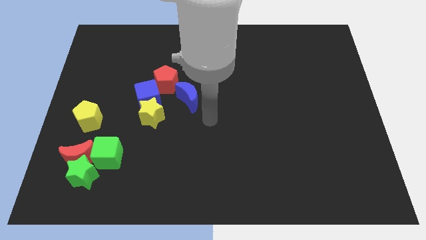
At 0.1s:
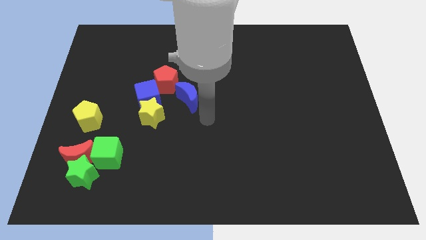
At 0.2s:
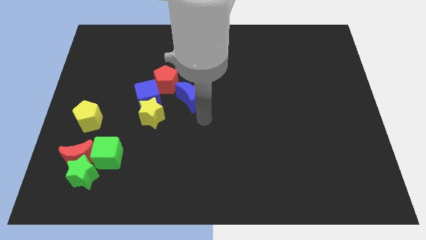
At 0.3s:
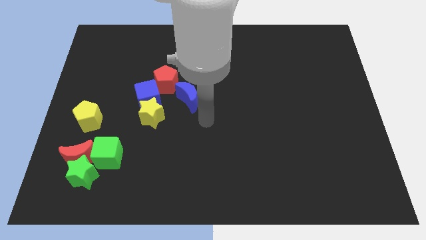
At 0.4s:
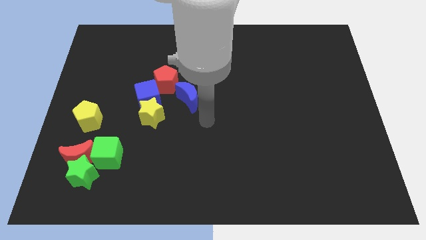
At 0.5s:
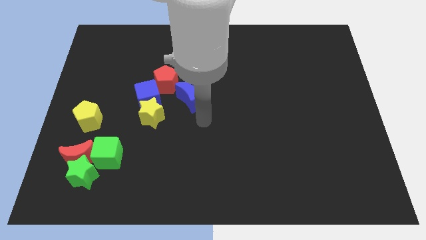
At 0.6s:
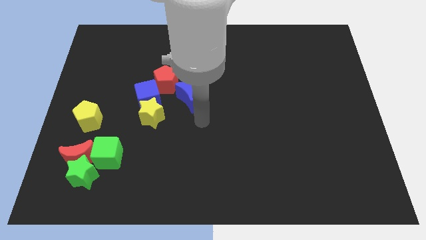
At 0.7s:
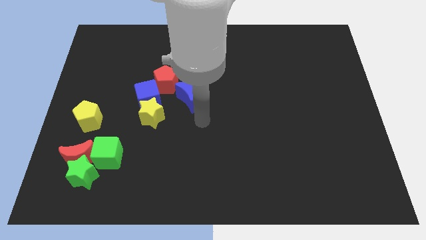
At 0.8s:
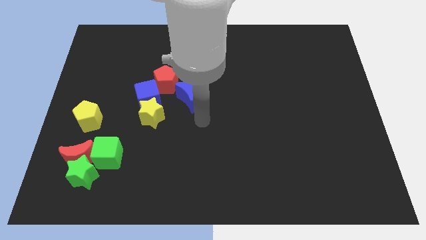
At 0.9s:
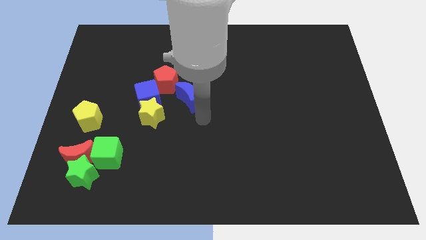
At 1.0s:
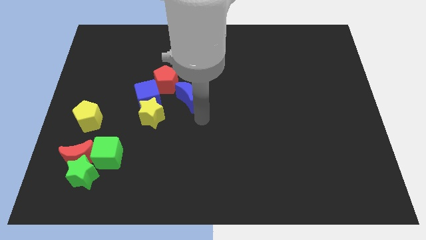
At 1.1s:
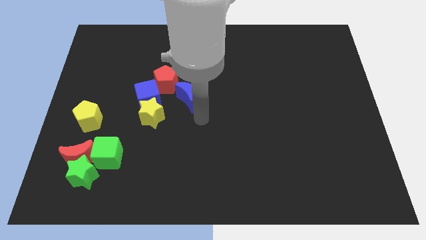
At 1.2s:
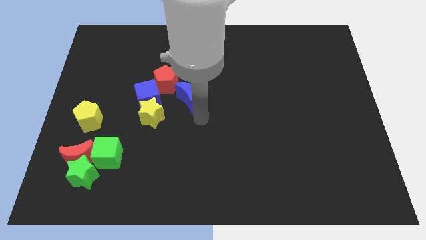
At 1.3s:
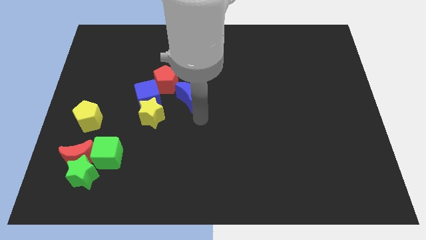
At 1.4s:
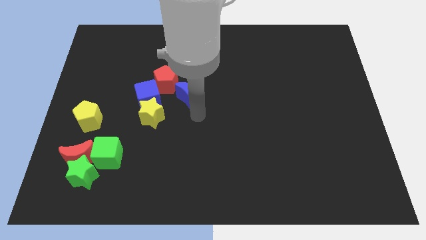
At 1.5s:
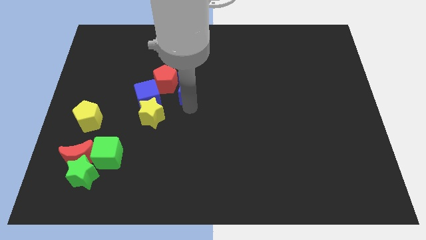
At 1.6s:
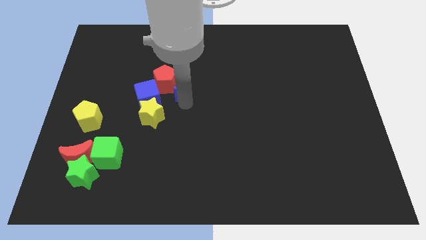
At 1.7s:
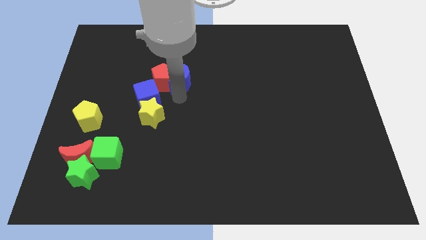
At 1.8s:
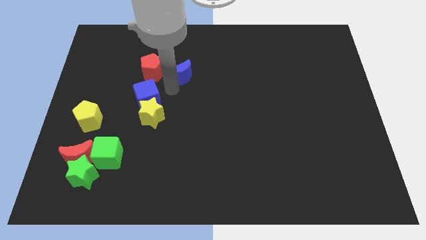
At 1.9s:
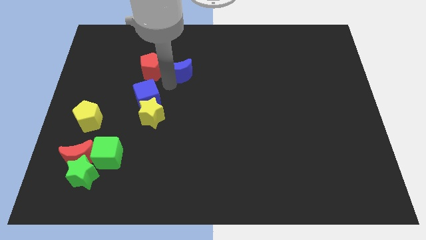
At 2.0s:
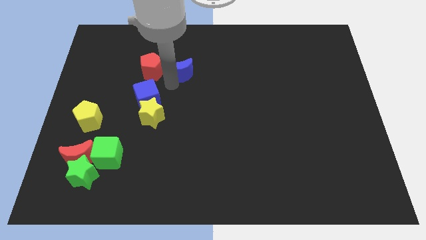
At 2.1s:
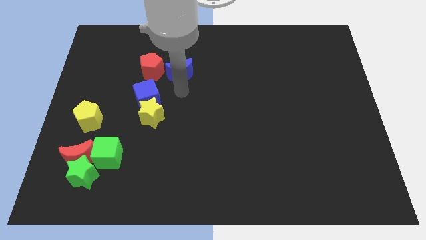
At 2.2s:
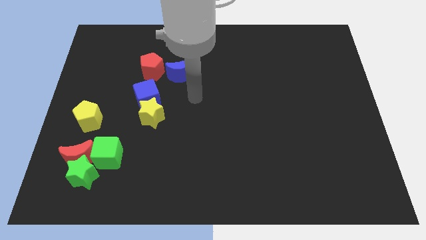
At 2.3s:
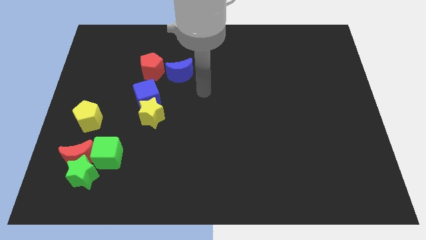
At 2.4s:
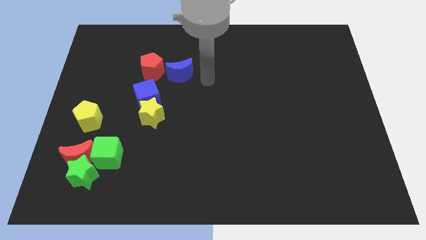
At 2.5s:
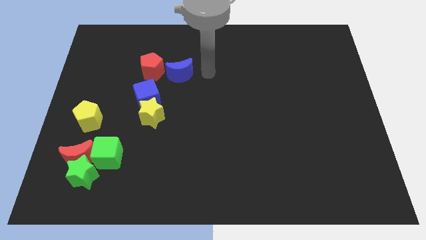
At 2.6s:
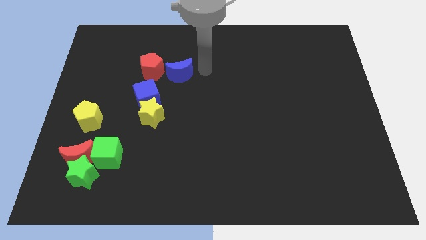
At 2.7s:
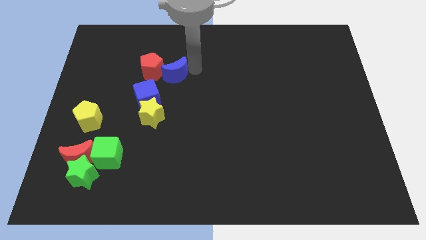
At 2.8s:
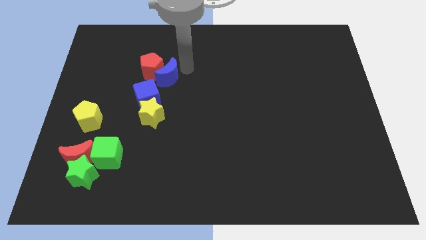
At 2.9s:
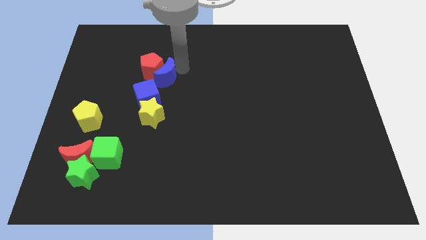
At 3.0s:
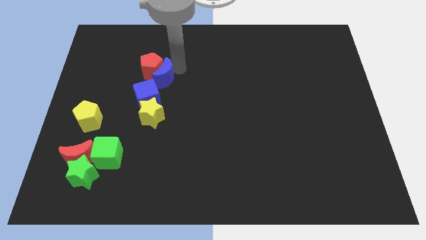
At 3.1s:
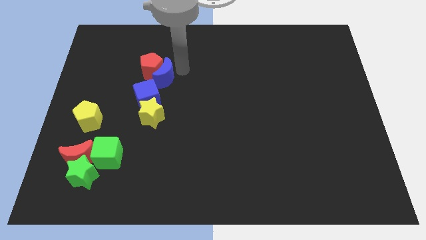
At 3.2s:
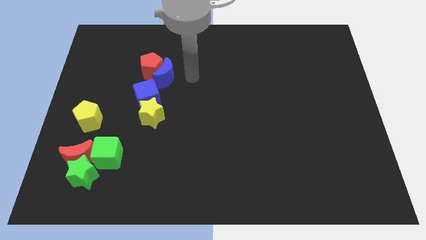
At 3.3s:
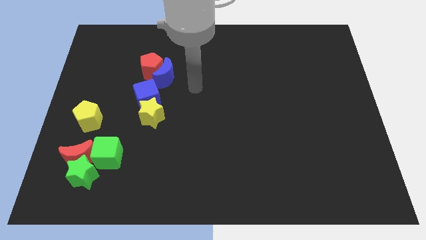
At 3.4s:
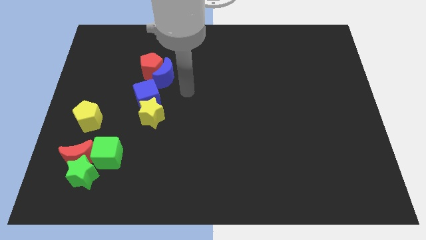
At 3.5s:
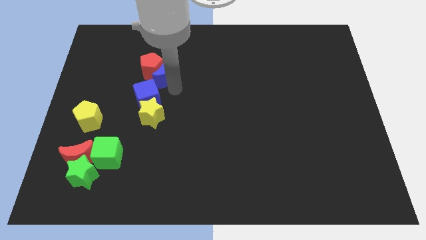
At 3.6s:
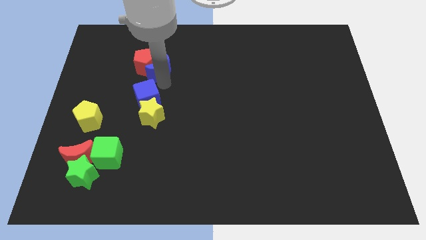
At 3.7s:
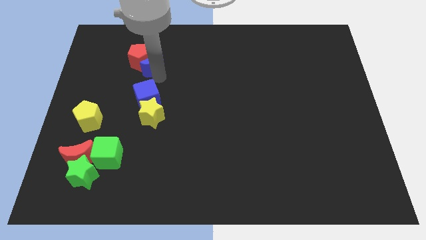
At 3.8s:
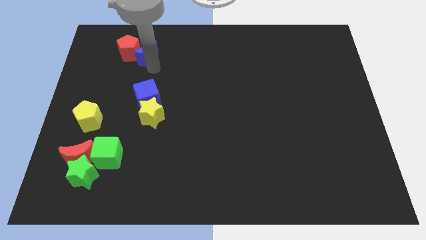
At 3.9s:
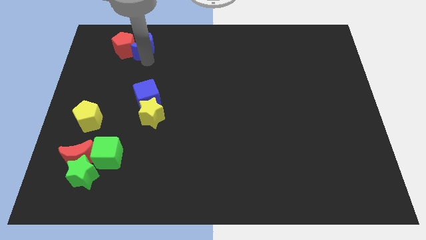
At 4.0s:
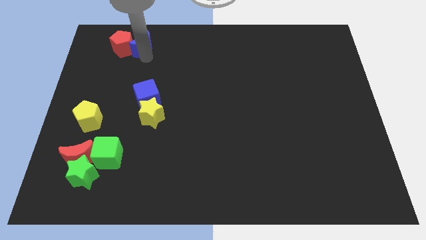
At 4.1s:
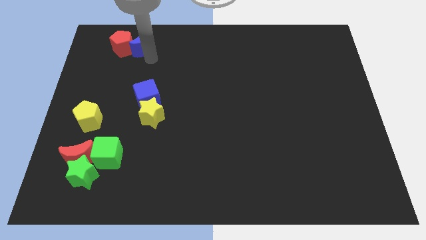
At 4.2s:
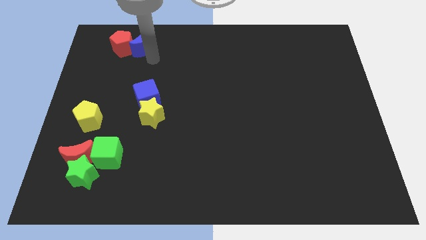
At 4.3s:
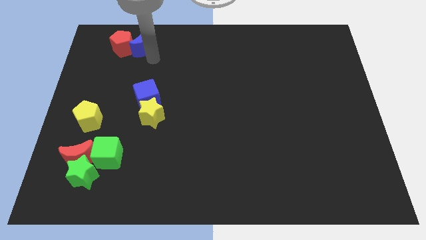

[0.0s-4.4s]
move the red pentagon and the blue moon towards the top left of the board

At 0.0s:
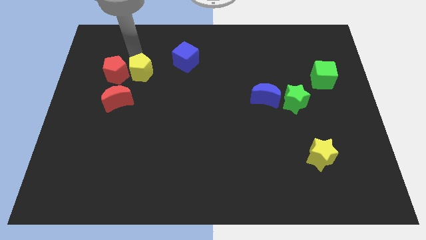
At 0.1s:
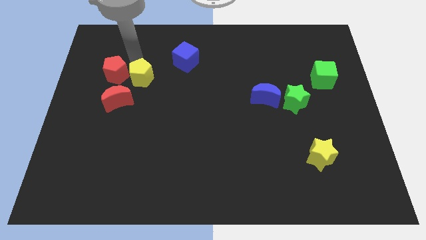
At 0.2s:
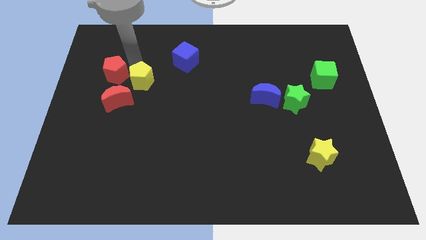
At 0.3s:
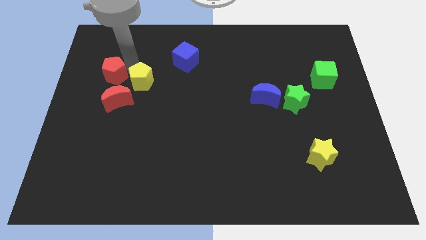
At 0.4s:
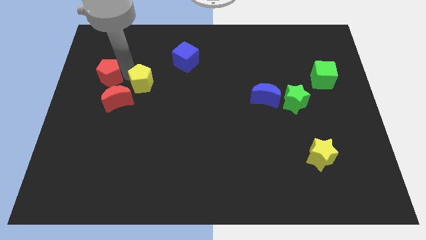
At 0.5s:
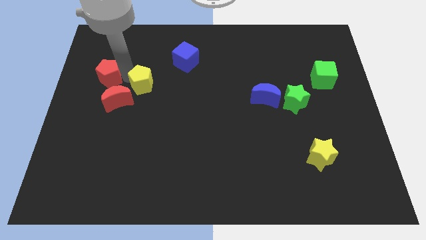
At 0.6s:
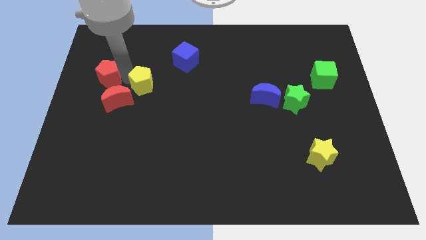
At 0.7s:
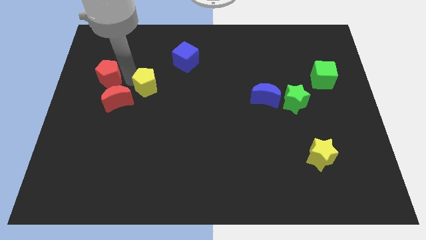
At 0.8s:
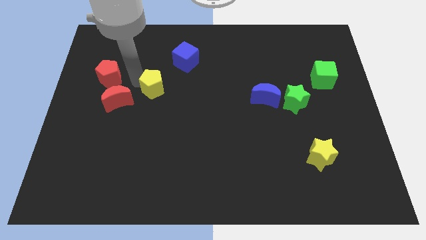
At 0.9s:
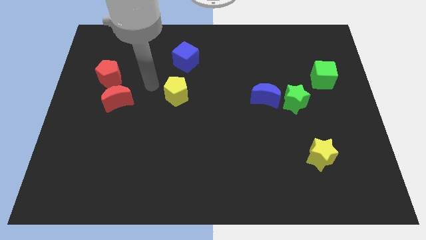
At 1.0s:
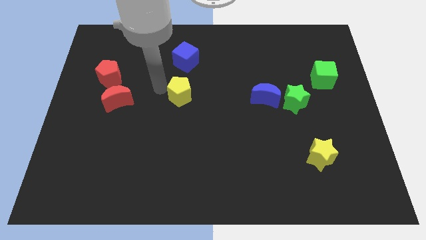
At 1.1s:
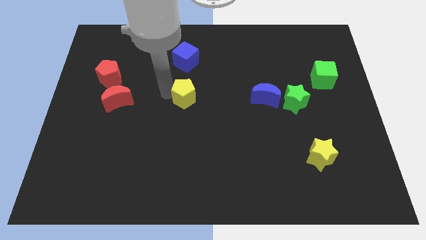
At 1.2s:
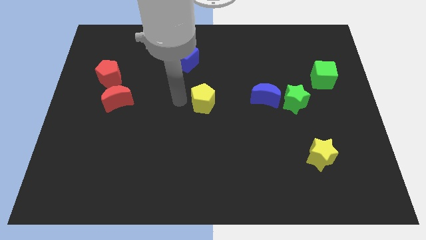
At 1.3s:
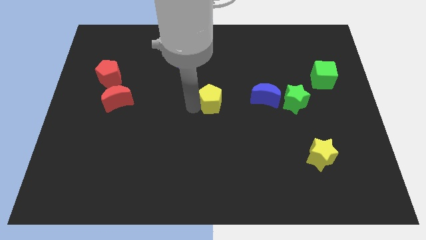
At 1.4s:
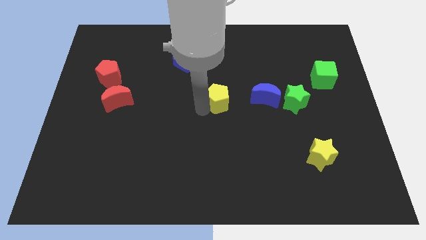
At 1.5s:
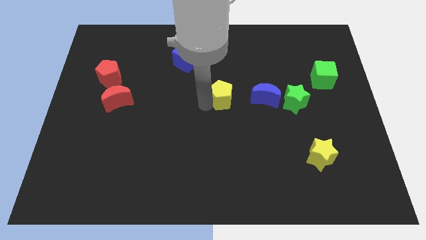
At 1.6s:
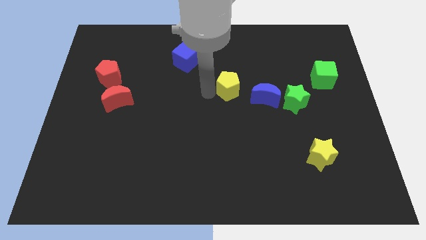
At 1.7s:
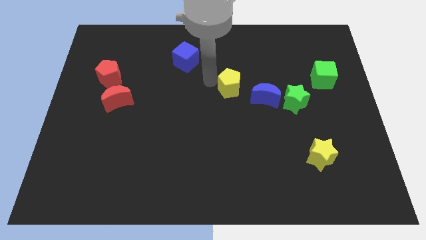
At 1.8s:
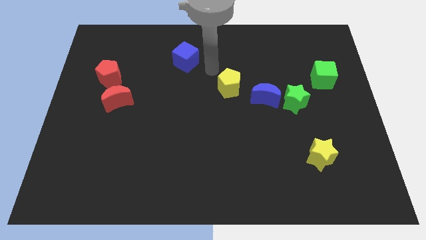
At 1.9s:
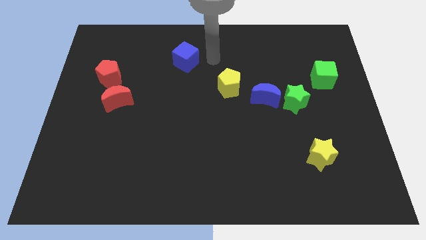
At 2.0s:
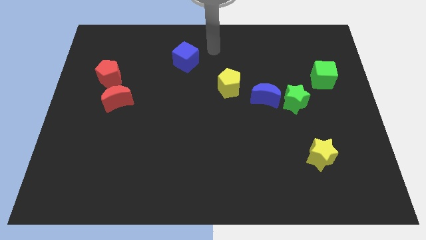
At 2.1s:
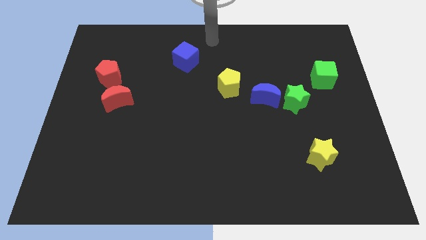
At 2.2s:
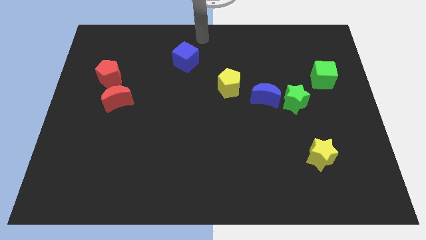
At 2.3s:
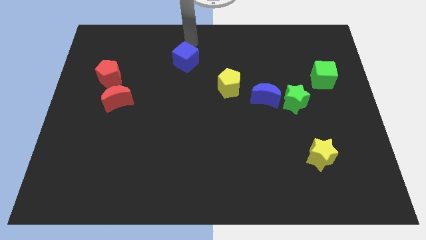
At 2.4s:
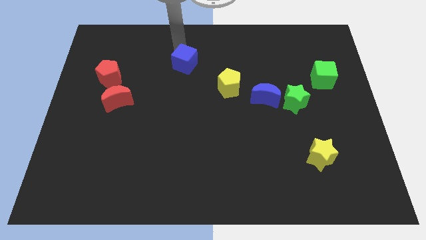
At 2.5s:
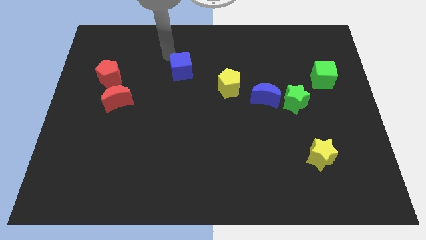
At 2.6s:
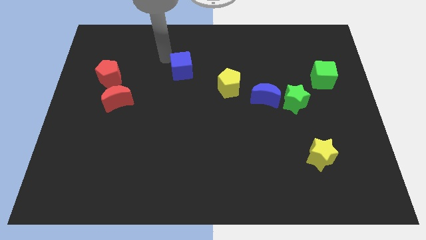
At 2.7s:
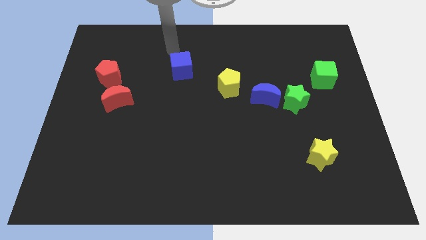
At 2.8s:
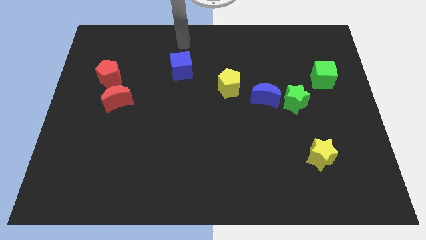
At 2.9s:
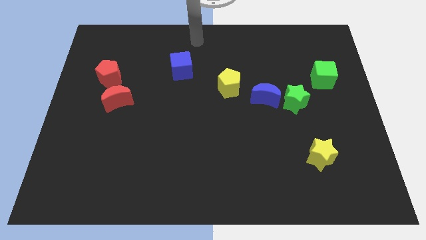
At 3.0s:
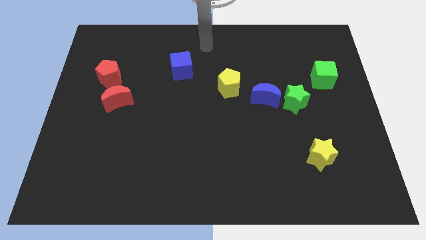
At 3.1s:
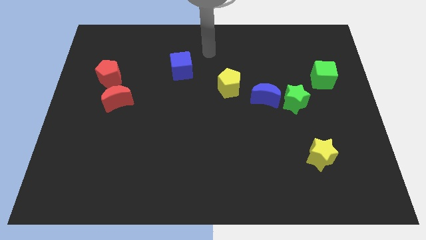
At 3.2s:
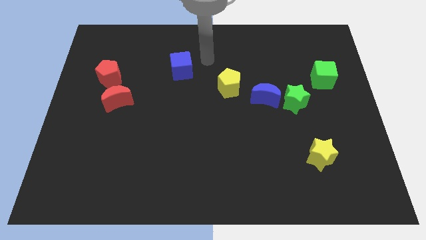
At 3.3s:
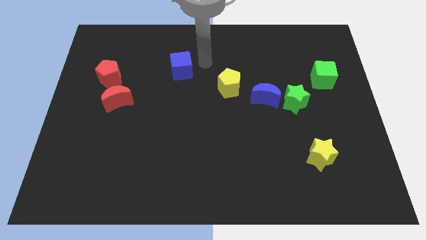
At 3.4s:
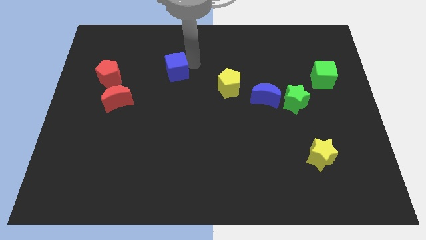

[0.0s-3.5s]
place the yellow pentagon and blue cube diagonally on the top left side of the blue moon

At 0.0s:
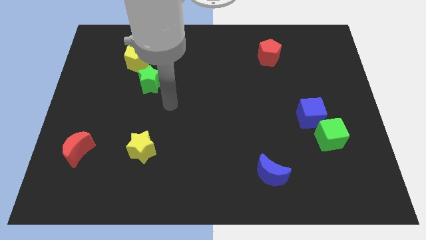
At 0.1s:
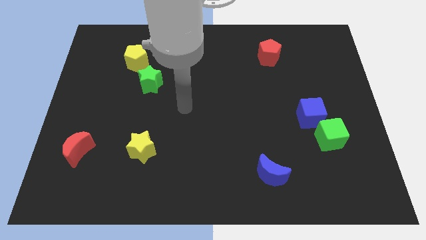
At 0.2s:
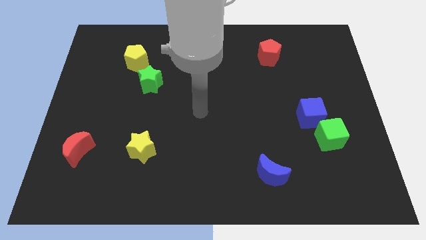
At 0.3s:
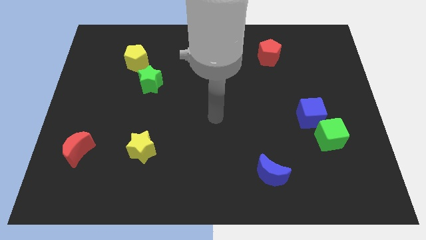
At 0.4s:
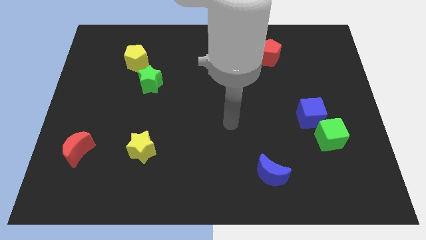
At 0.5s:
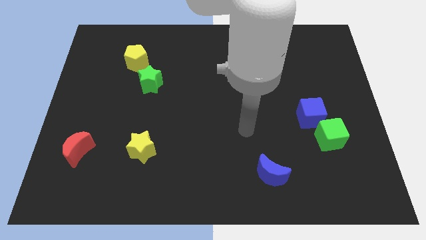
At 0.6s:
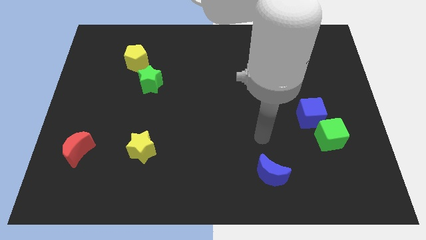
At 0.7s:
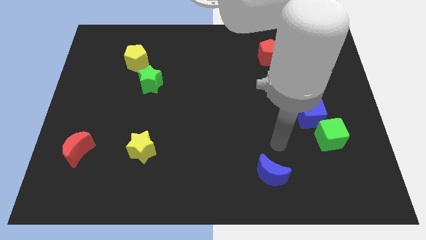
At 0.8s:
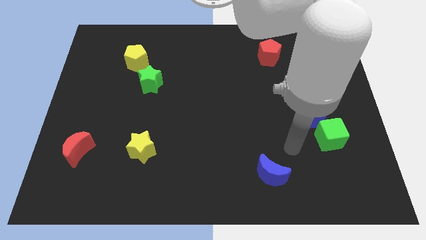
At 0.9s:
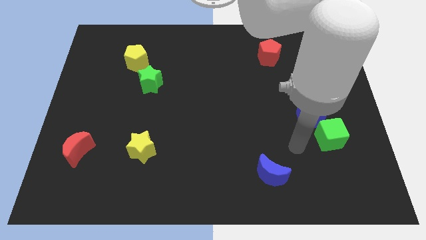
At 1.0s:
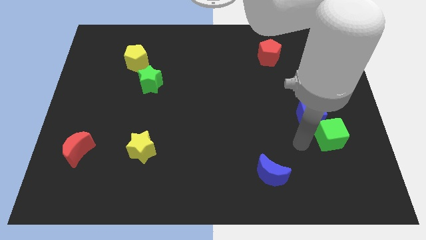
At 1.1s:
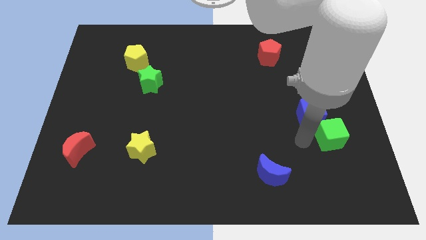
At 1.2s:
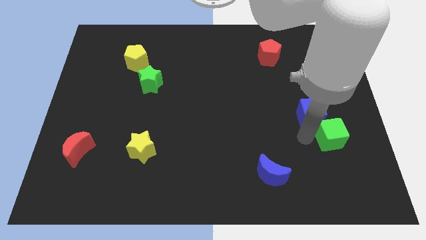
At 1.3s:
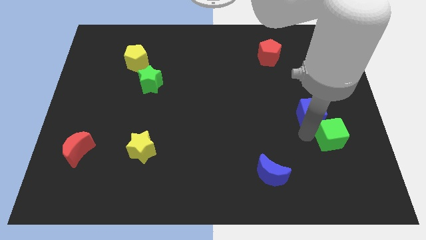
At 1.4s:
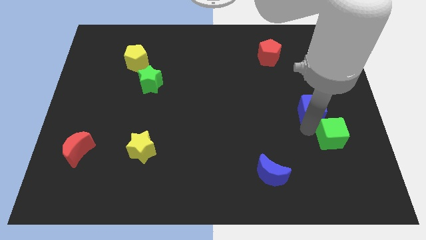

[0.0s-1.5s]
tap the blue cube
